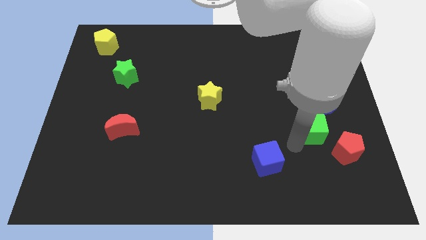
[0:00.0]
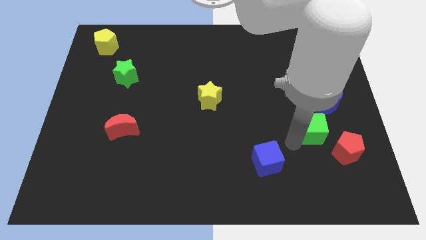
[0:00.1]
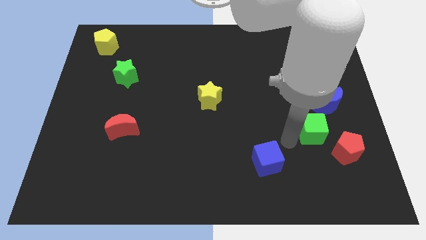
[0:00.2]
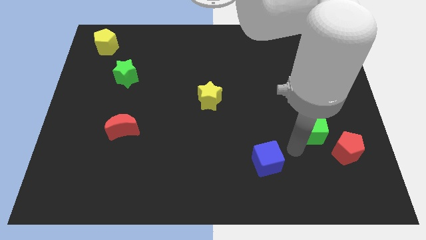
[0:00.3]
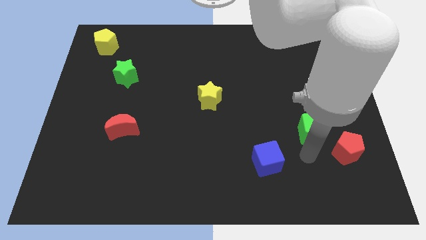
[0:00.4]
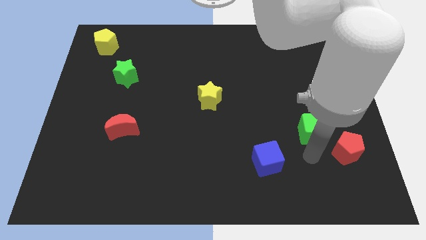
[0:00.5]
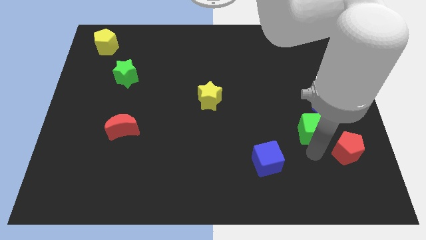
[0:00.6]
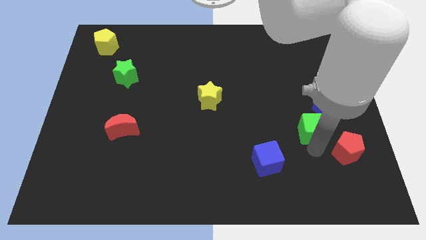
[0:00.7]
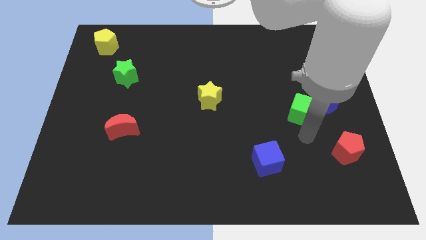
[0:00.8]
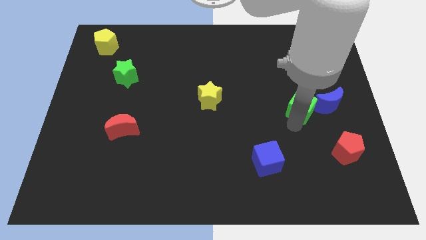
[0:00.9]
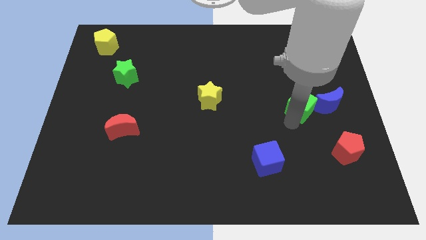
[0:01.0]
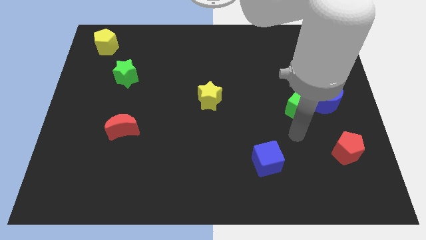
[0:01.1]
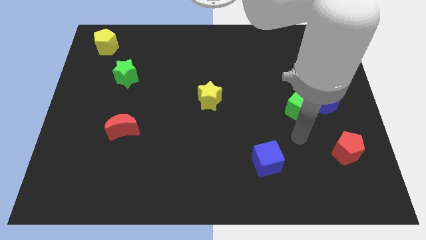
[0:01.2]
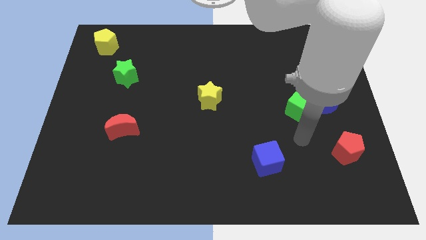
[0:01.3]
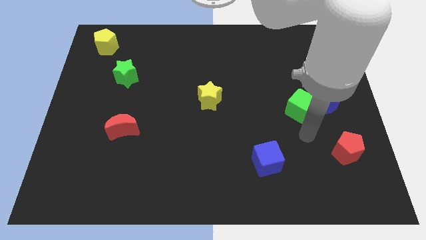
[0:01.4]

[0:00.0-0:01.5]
move the green cube to the blue moon

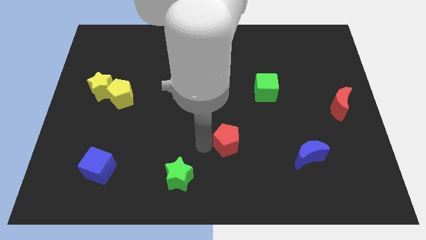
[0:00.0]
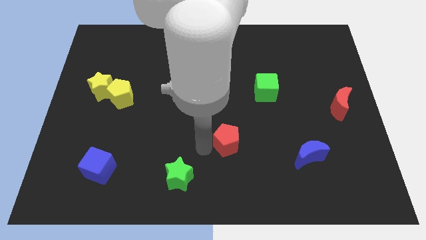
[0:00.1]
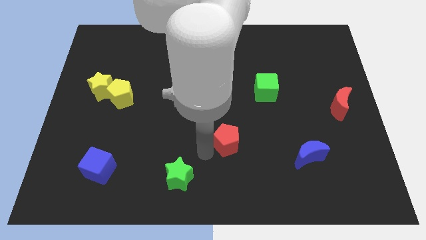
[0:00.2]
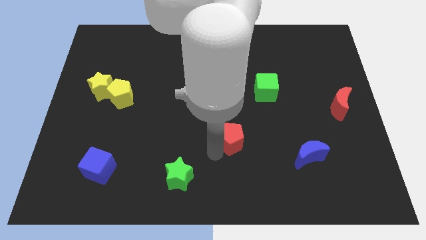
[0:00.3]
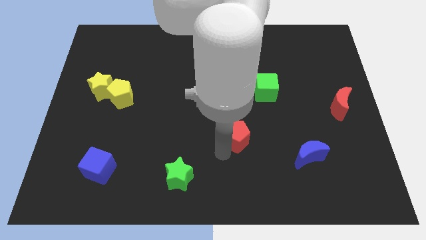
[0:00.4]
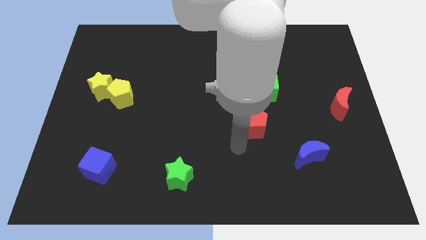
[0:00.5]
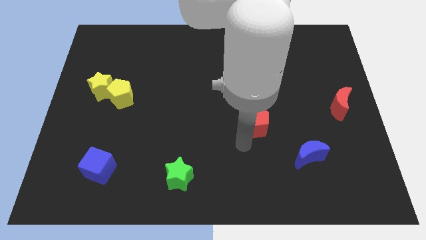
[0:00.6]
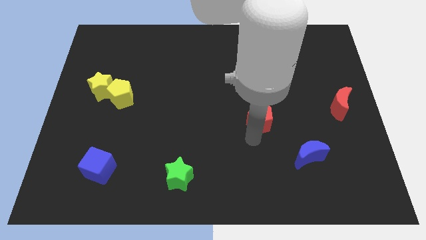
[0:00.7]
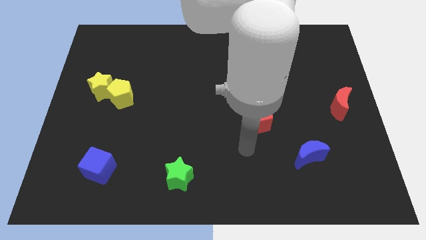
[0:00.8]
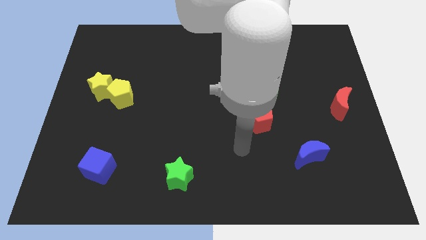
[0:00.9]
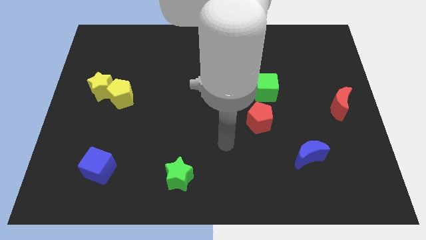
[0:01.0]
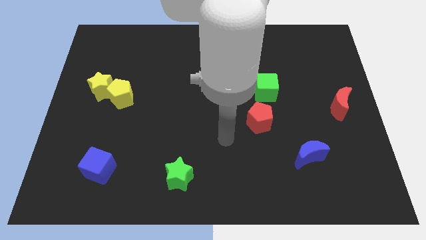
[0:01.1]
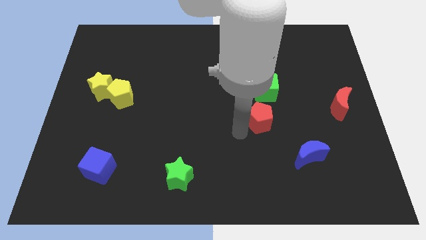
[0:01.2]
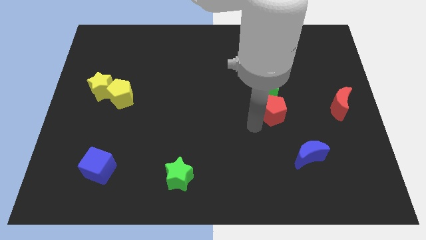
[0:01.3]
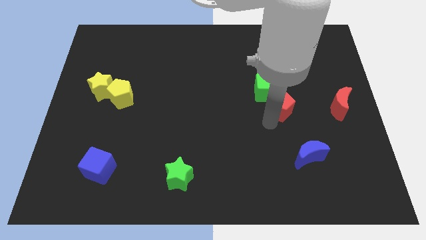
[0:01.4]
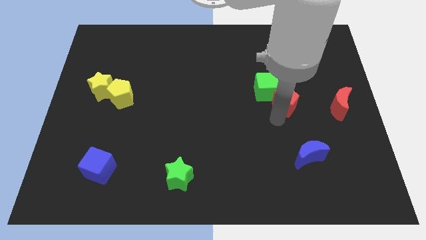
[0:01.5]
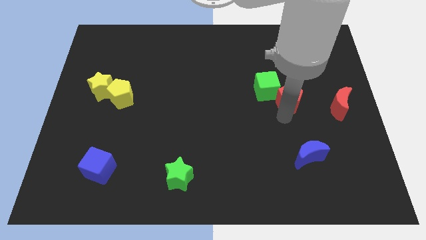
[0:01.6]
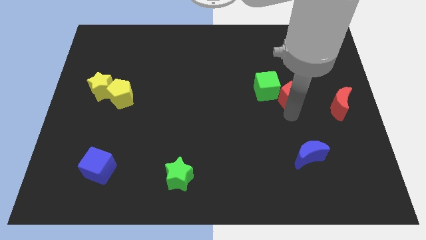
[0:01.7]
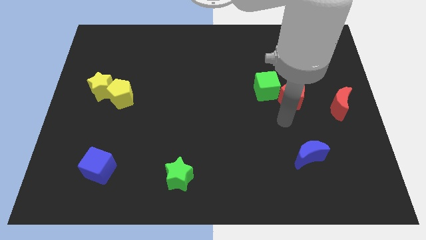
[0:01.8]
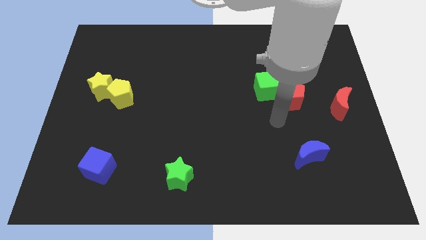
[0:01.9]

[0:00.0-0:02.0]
move the red pentagon close to the green cube

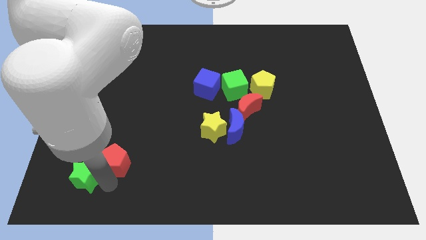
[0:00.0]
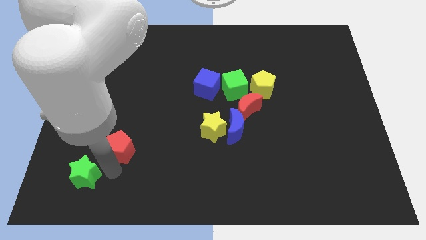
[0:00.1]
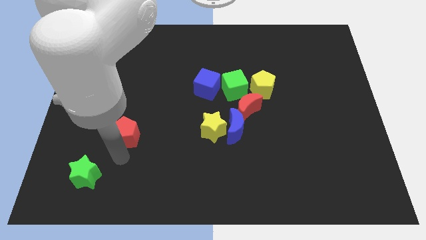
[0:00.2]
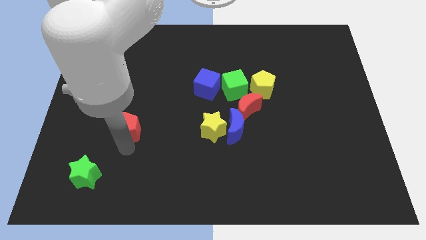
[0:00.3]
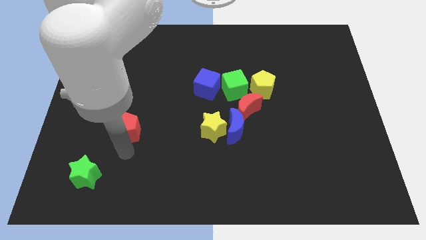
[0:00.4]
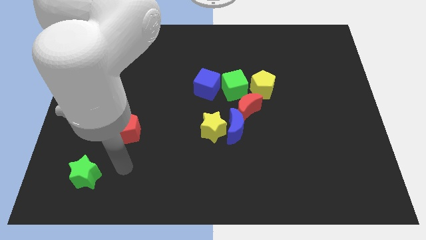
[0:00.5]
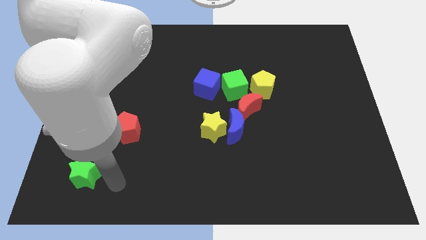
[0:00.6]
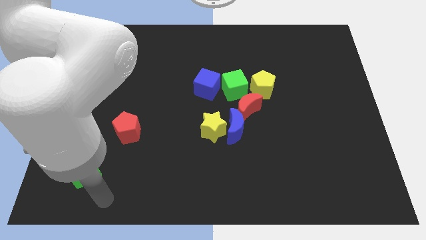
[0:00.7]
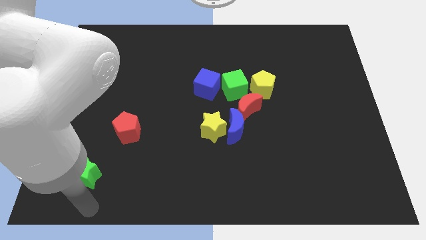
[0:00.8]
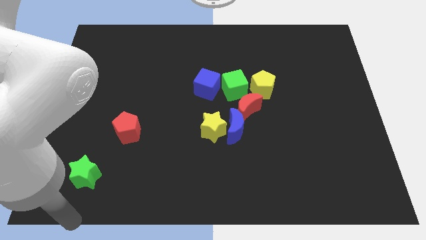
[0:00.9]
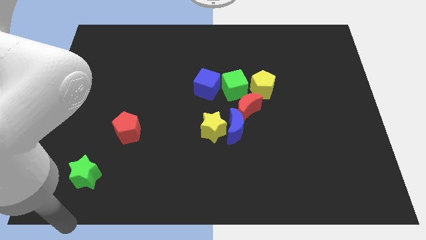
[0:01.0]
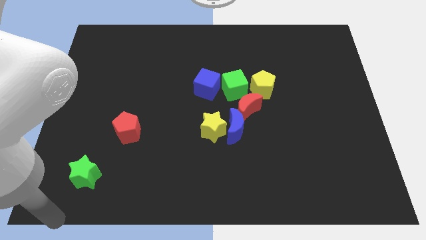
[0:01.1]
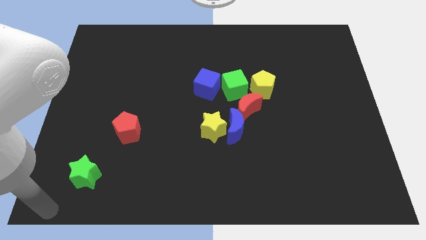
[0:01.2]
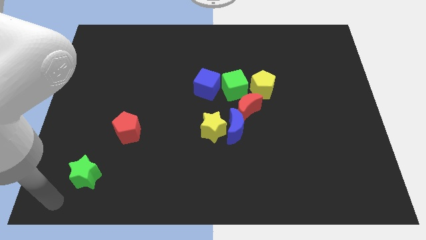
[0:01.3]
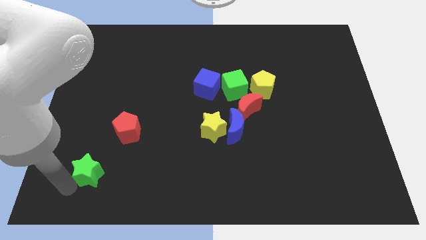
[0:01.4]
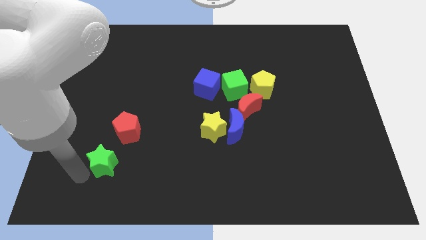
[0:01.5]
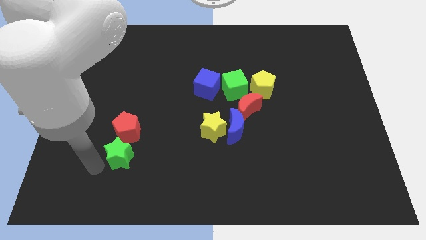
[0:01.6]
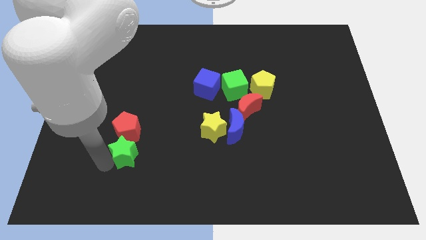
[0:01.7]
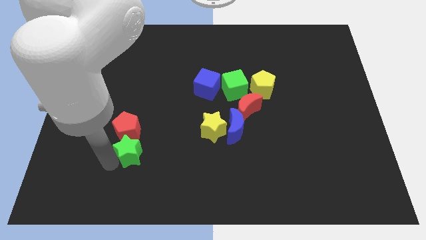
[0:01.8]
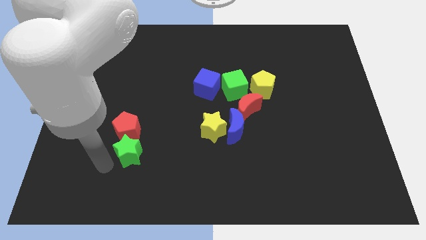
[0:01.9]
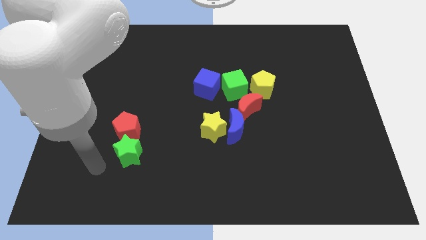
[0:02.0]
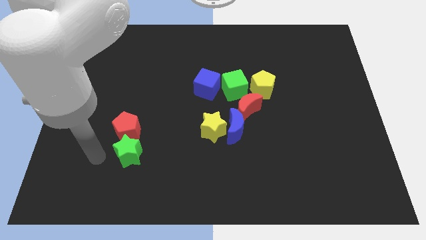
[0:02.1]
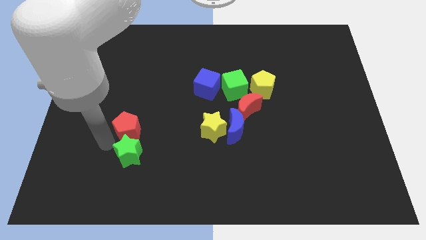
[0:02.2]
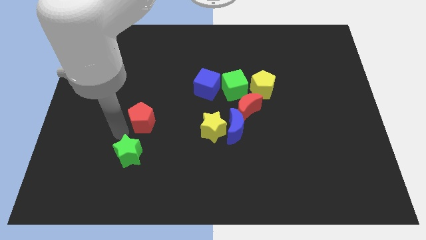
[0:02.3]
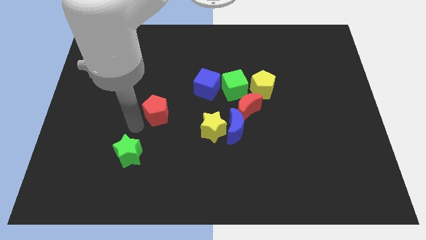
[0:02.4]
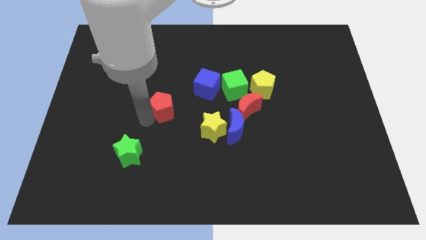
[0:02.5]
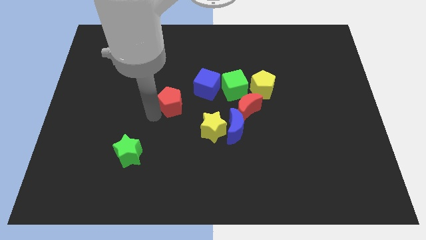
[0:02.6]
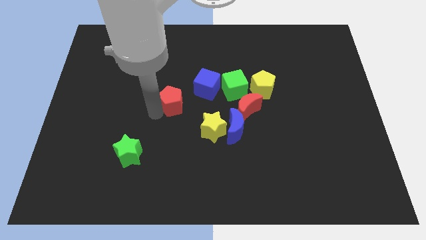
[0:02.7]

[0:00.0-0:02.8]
place the green star diagonal to the yellow star

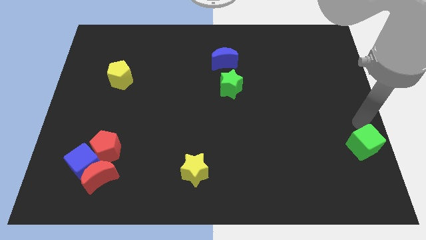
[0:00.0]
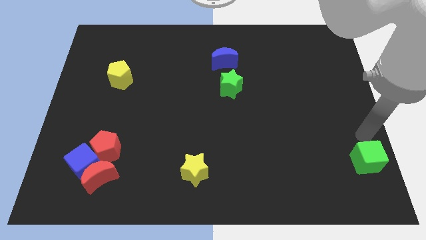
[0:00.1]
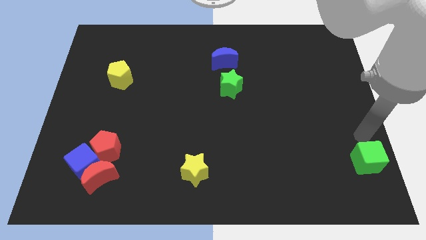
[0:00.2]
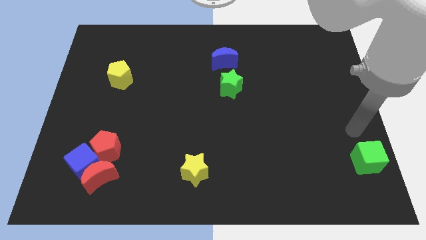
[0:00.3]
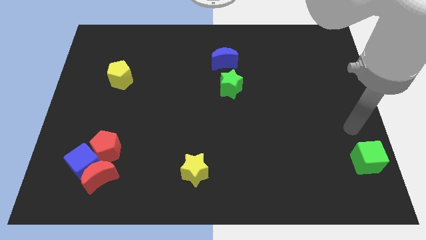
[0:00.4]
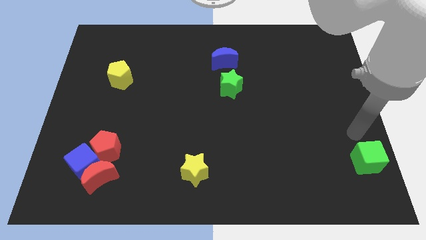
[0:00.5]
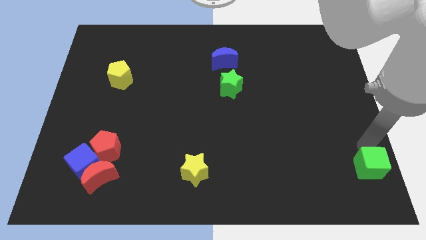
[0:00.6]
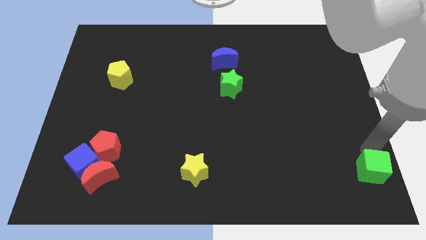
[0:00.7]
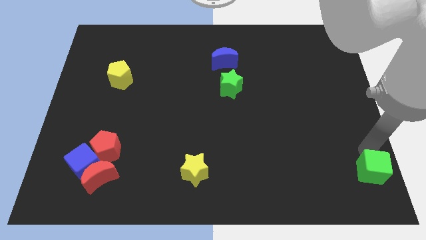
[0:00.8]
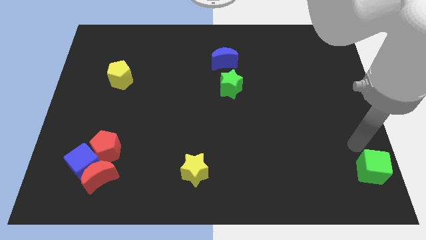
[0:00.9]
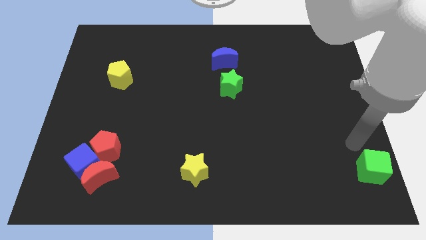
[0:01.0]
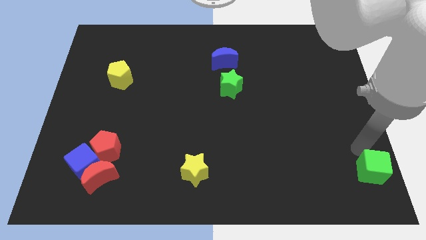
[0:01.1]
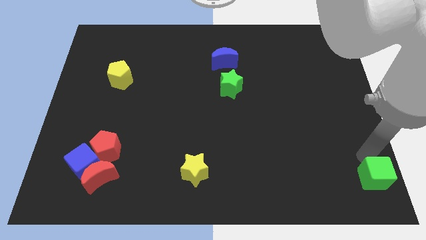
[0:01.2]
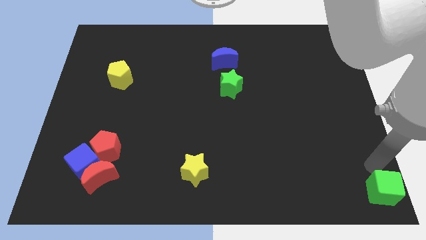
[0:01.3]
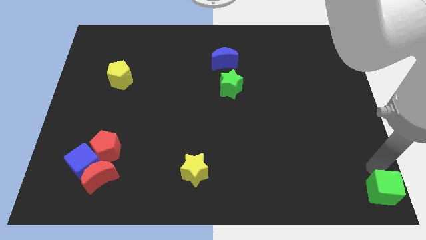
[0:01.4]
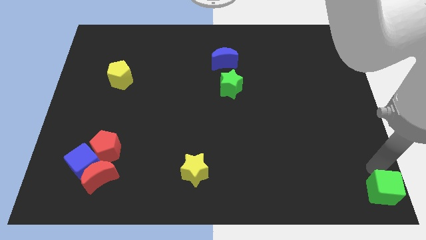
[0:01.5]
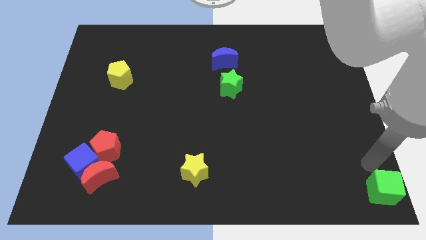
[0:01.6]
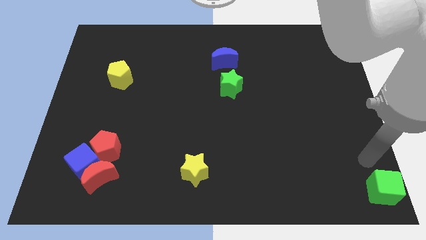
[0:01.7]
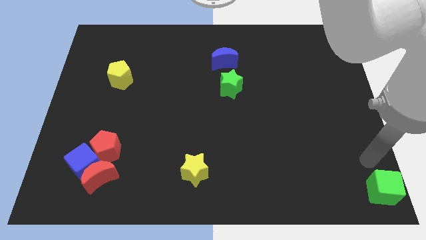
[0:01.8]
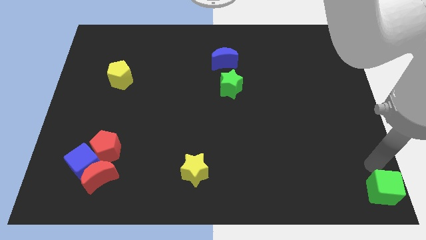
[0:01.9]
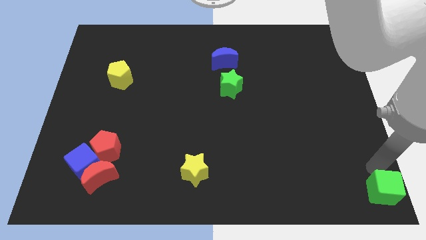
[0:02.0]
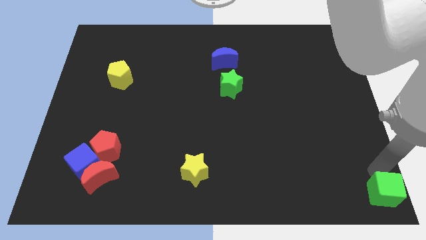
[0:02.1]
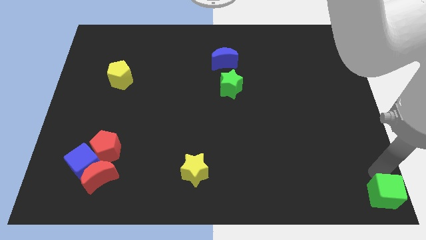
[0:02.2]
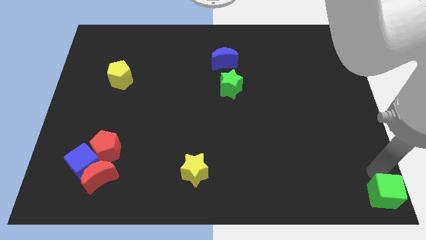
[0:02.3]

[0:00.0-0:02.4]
push the green cube to the bottom right corner of the board
